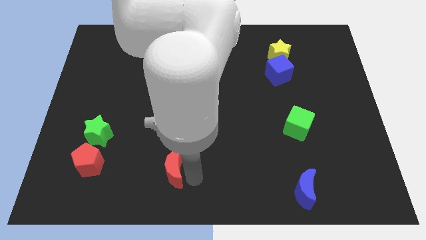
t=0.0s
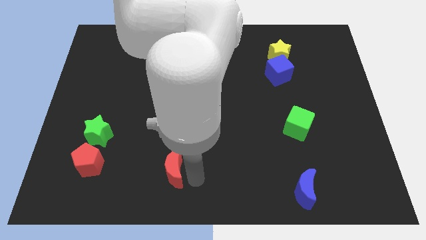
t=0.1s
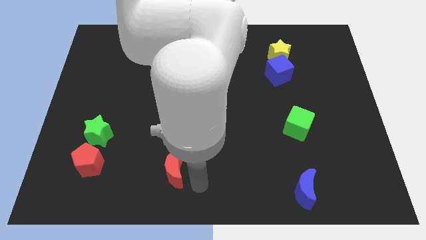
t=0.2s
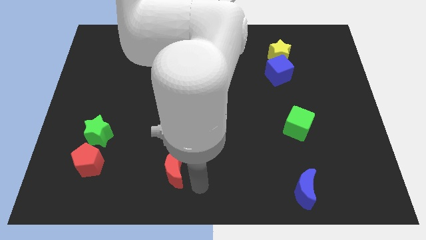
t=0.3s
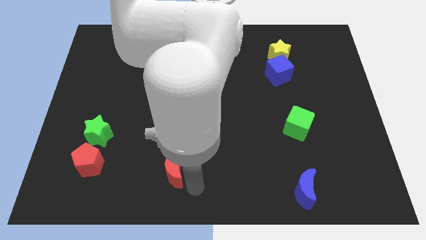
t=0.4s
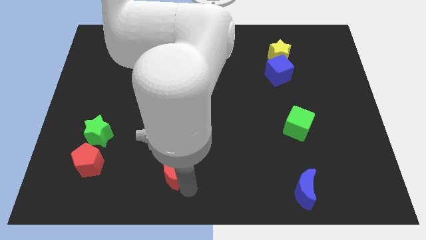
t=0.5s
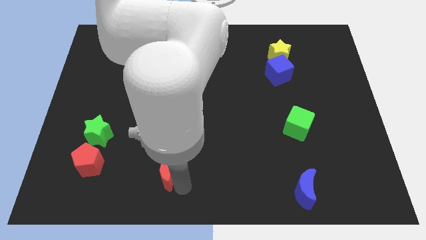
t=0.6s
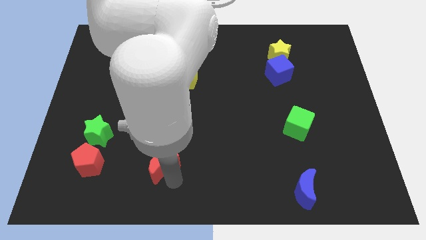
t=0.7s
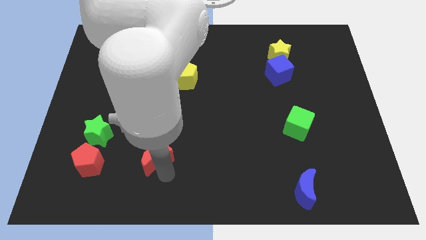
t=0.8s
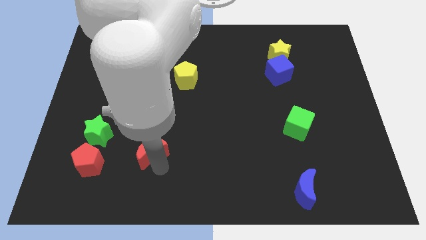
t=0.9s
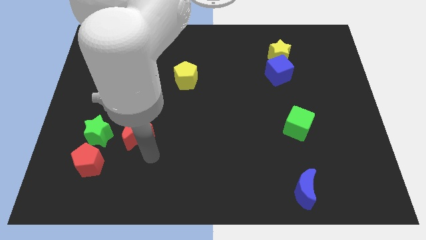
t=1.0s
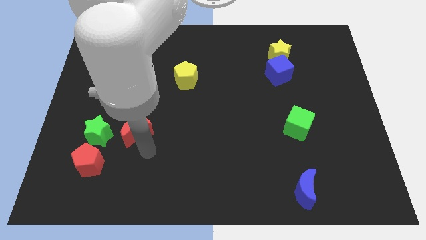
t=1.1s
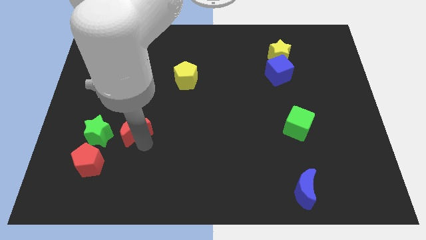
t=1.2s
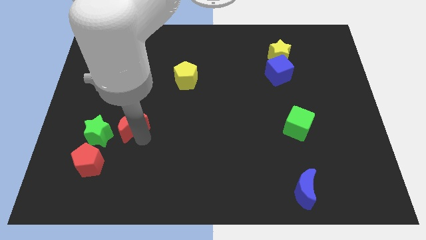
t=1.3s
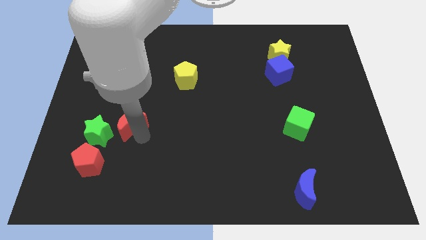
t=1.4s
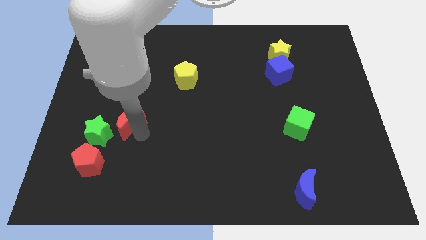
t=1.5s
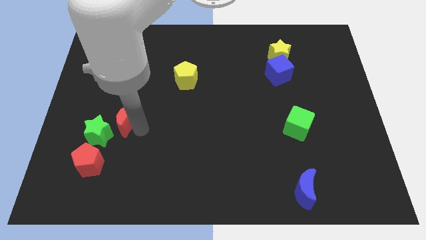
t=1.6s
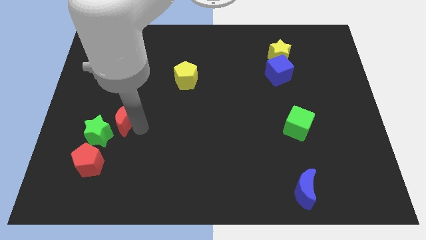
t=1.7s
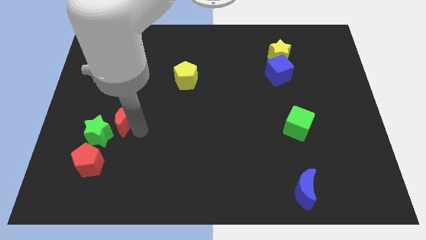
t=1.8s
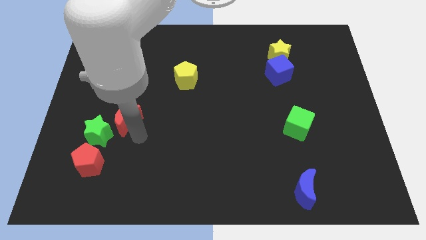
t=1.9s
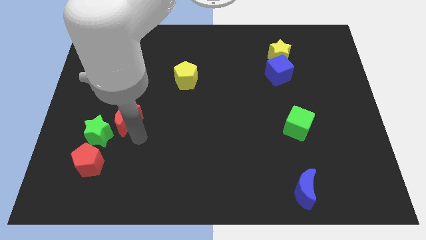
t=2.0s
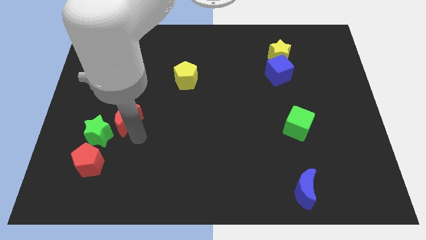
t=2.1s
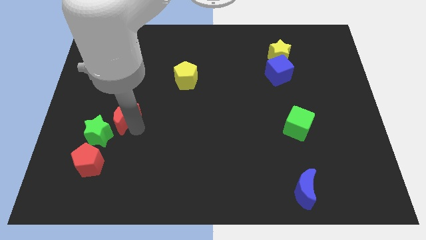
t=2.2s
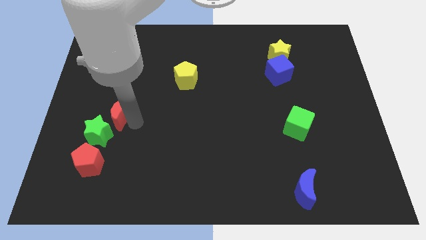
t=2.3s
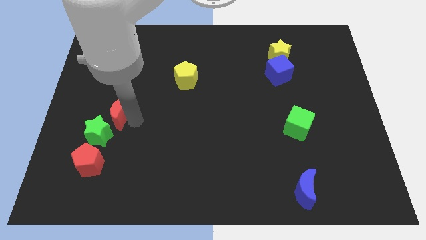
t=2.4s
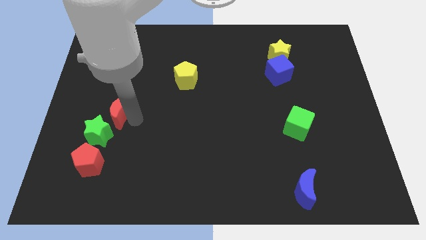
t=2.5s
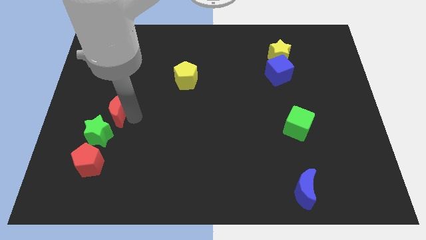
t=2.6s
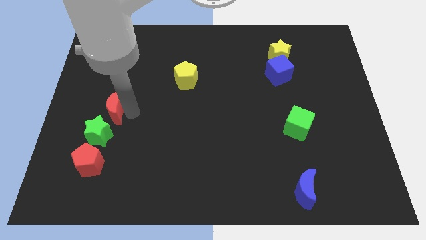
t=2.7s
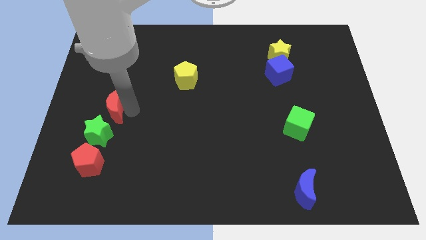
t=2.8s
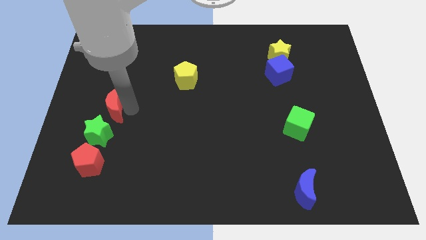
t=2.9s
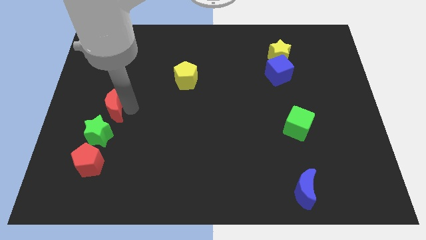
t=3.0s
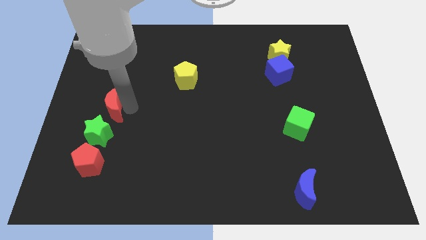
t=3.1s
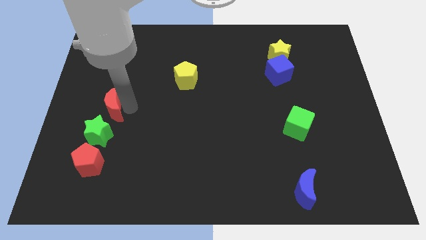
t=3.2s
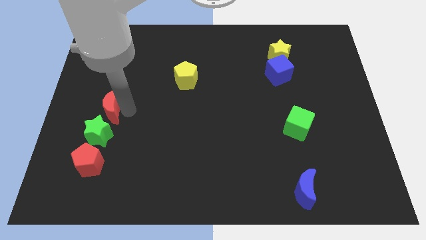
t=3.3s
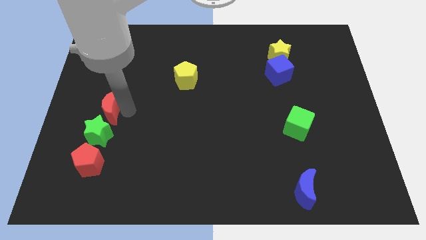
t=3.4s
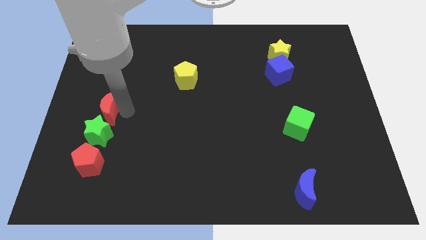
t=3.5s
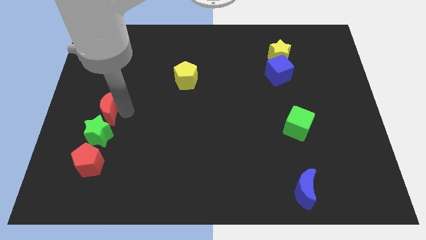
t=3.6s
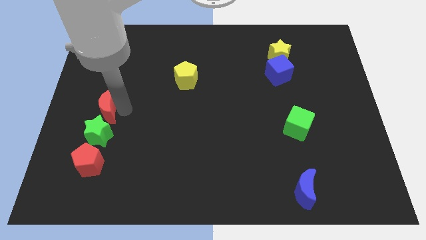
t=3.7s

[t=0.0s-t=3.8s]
slide the red moon above the green star

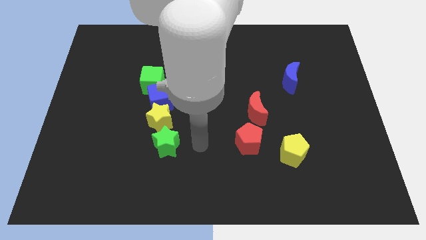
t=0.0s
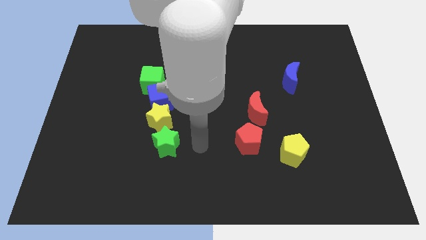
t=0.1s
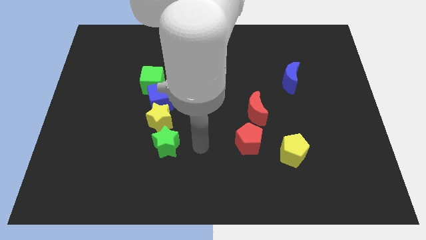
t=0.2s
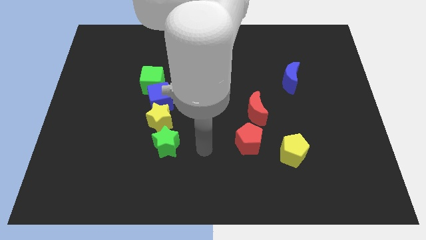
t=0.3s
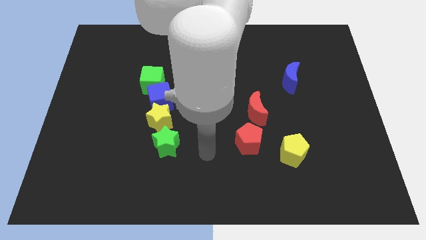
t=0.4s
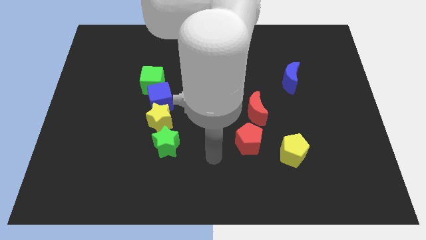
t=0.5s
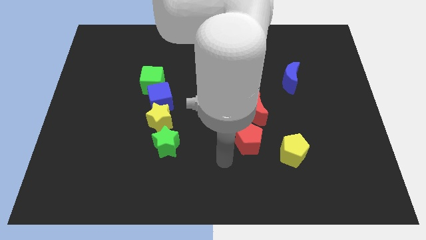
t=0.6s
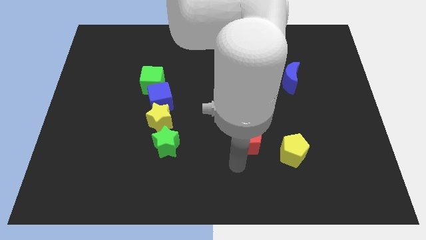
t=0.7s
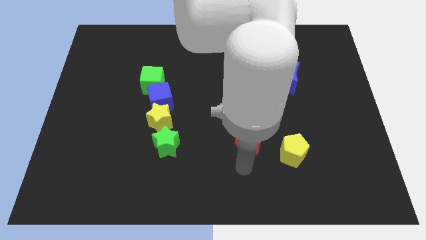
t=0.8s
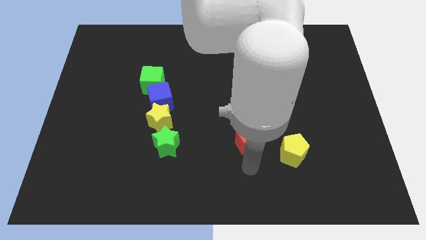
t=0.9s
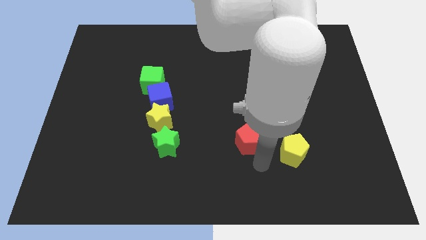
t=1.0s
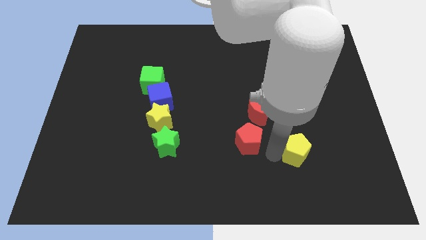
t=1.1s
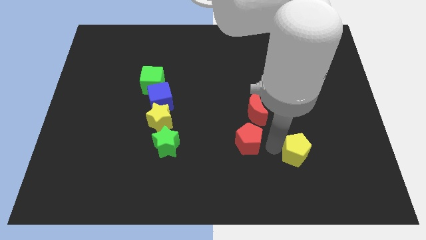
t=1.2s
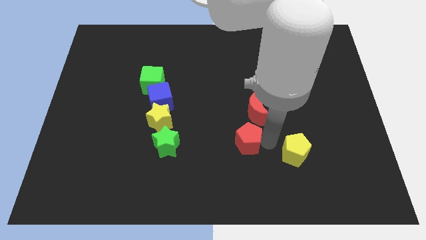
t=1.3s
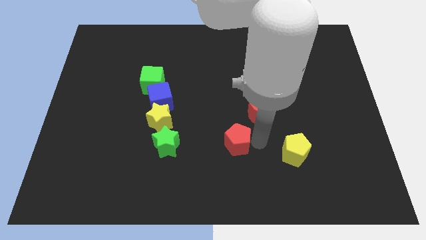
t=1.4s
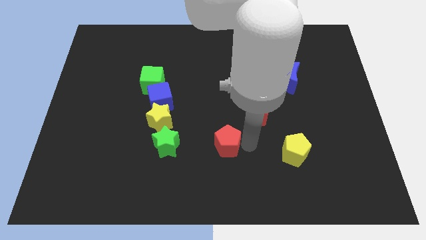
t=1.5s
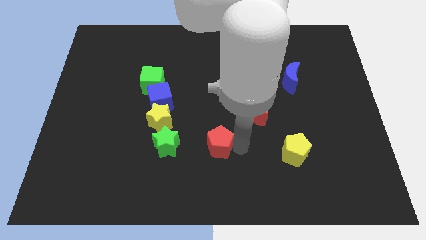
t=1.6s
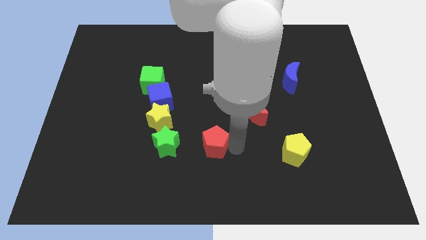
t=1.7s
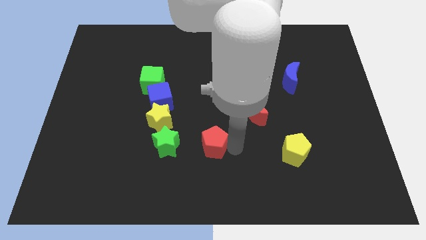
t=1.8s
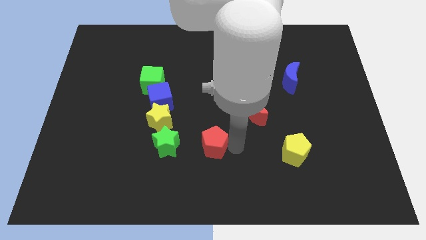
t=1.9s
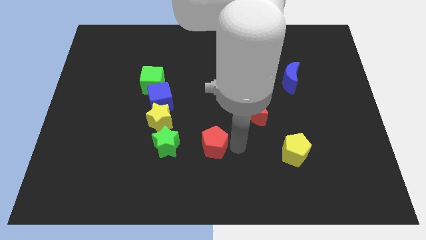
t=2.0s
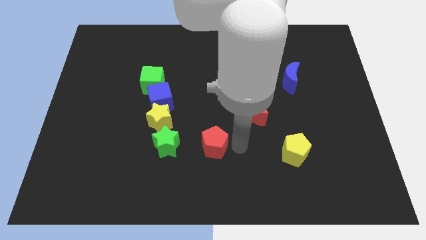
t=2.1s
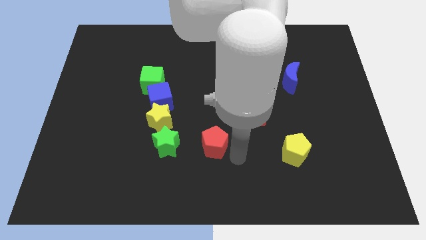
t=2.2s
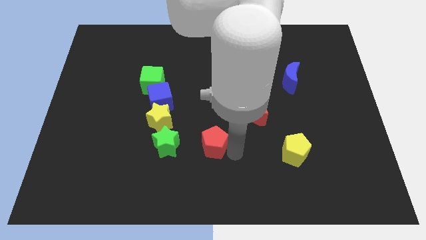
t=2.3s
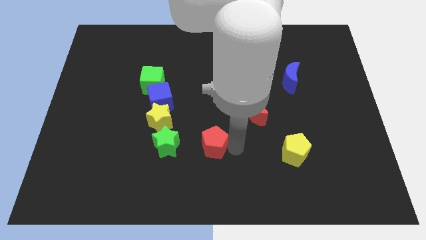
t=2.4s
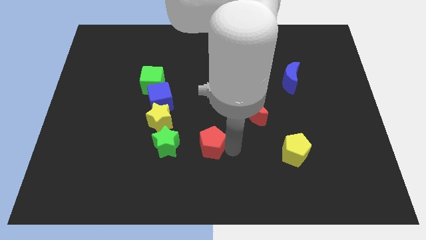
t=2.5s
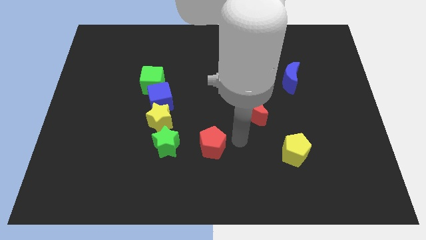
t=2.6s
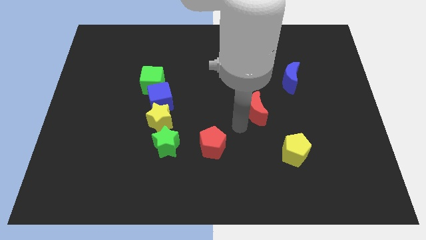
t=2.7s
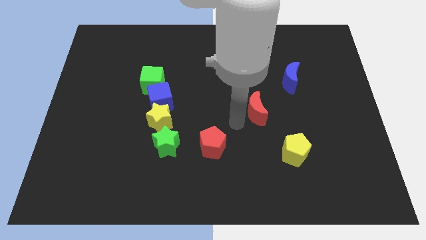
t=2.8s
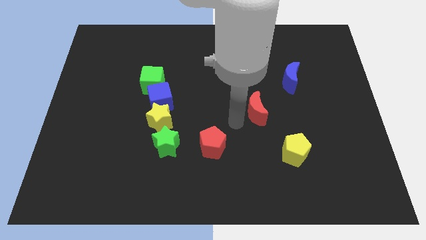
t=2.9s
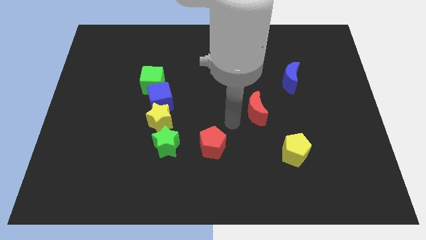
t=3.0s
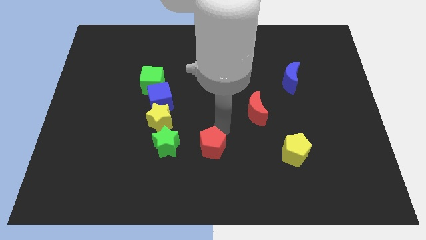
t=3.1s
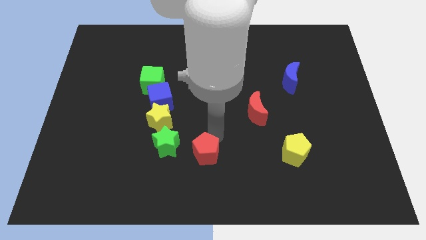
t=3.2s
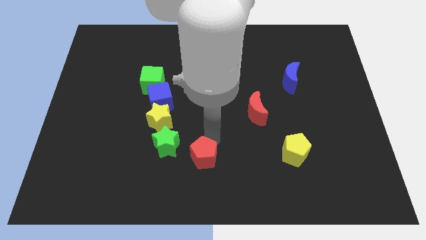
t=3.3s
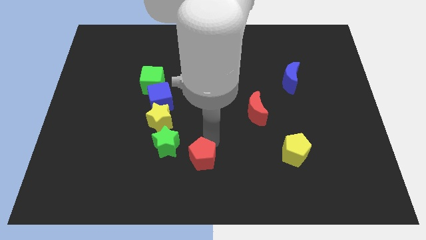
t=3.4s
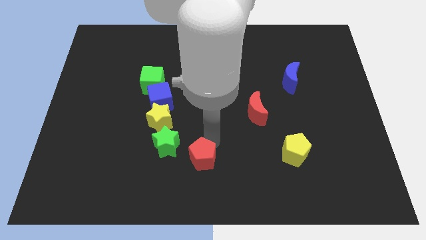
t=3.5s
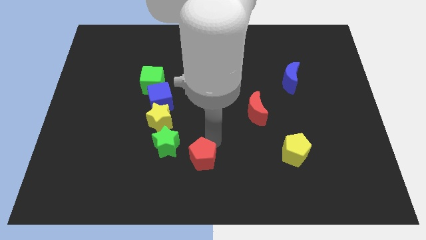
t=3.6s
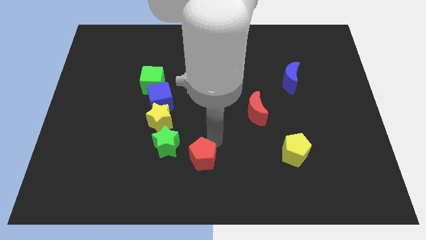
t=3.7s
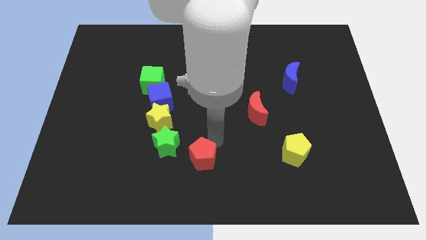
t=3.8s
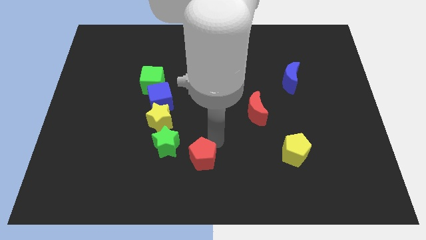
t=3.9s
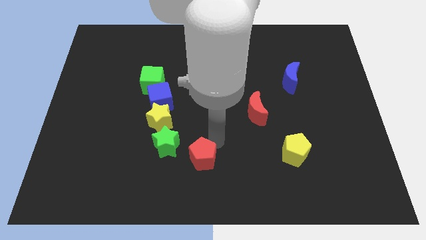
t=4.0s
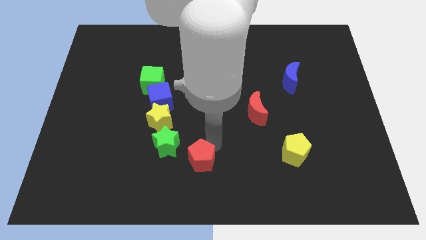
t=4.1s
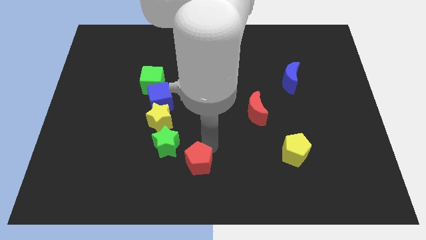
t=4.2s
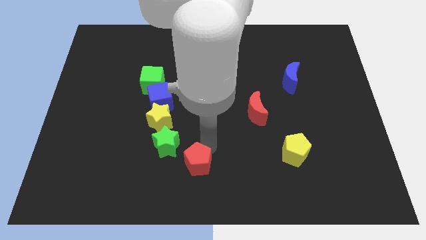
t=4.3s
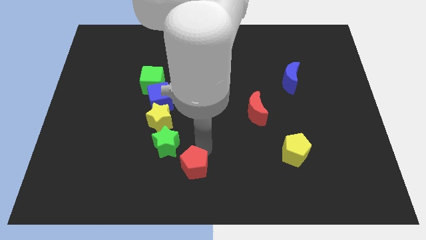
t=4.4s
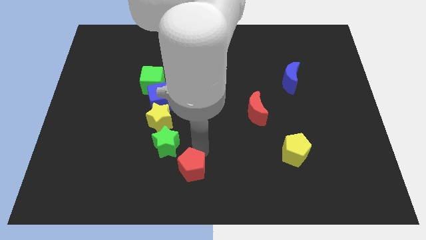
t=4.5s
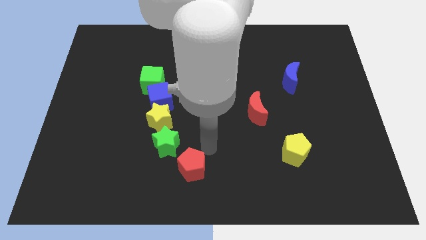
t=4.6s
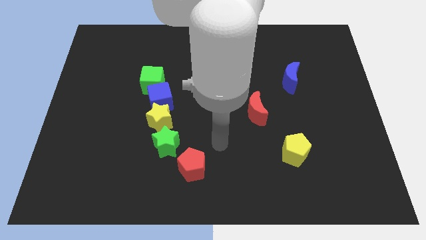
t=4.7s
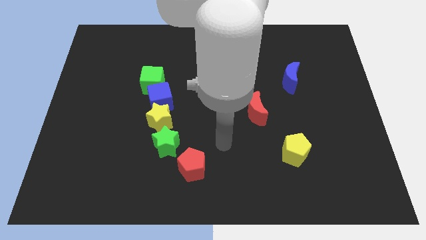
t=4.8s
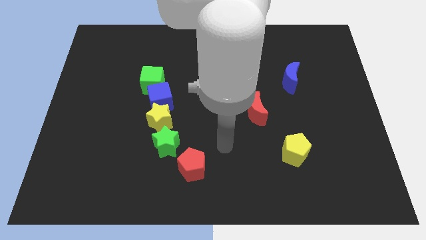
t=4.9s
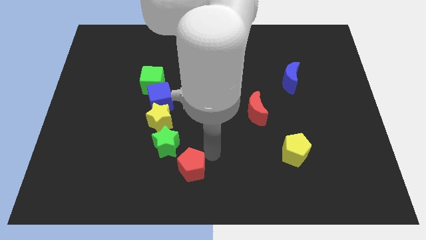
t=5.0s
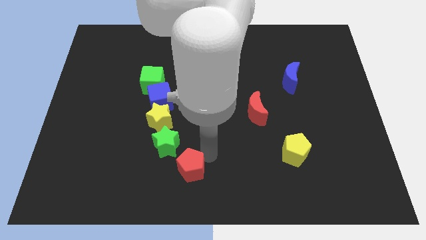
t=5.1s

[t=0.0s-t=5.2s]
place red pentagon to the right bottom of green star
